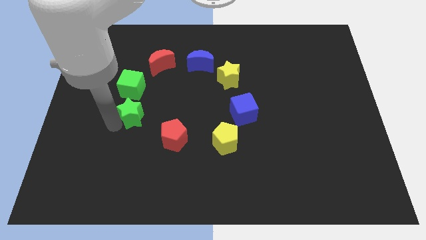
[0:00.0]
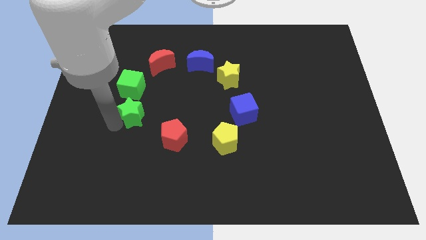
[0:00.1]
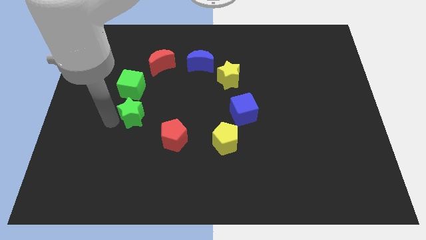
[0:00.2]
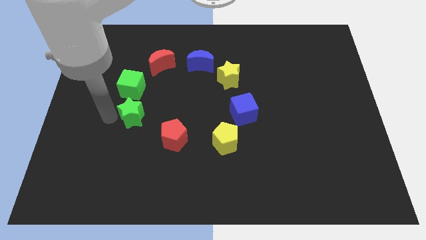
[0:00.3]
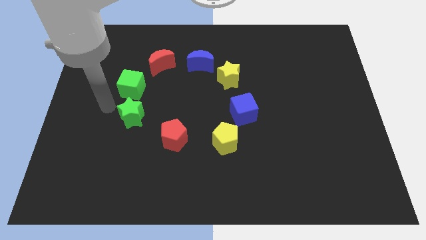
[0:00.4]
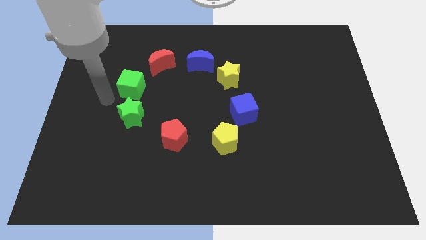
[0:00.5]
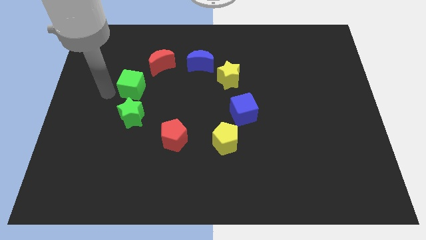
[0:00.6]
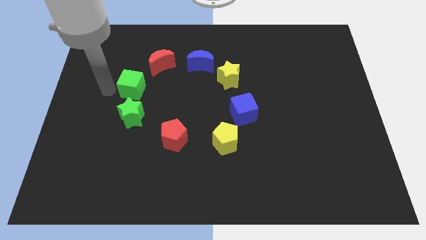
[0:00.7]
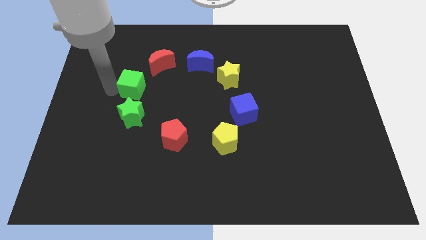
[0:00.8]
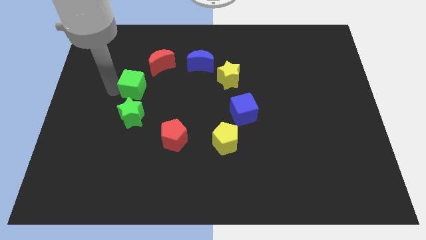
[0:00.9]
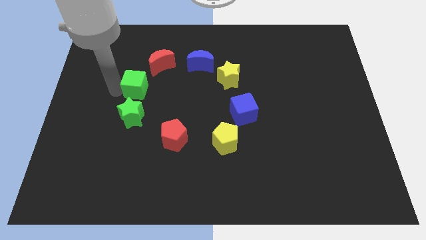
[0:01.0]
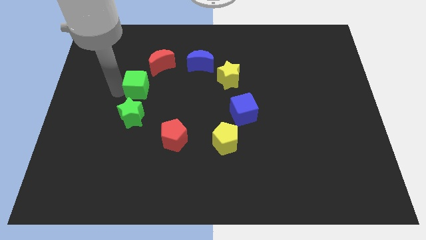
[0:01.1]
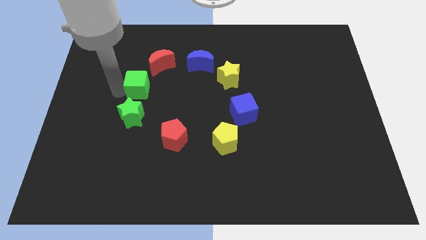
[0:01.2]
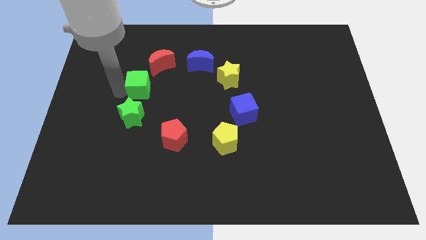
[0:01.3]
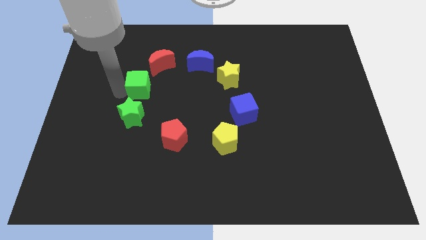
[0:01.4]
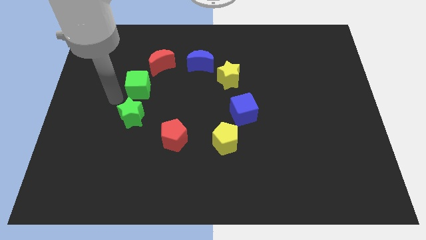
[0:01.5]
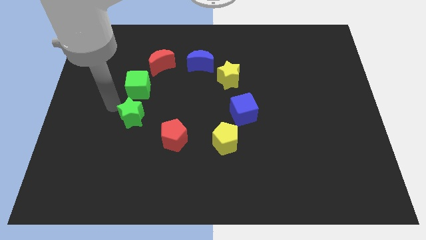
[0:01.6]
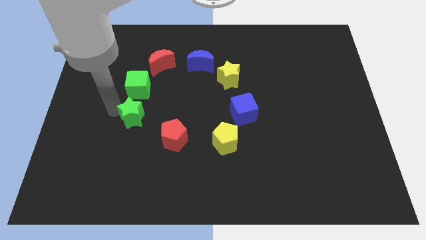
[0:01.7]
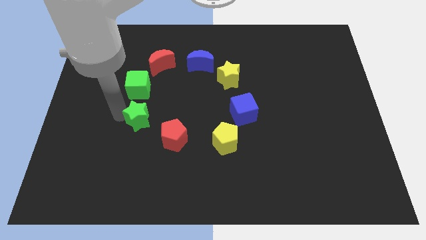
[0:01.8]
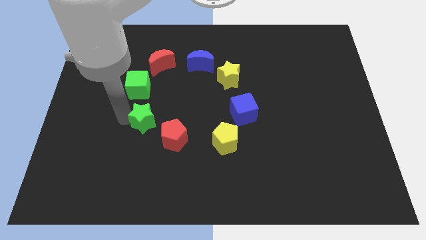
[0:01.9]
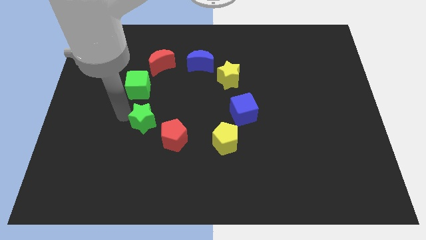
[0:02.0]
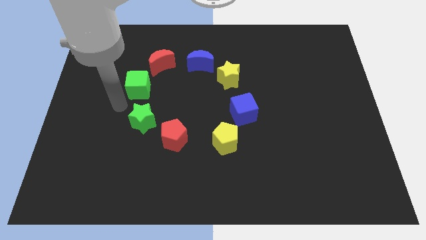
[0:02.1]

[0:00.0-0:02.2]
push green cube slightly right

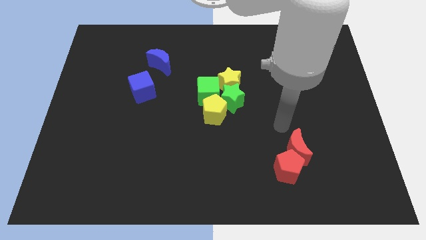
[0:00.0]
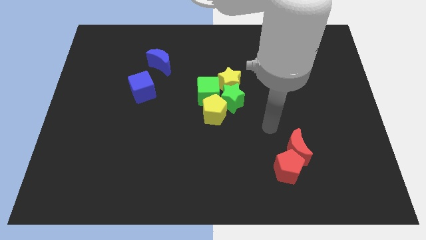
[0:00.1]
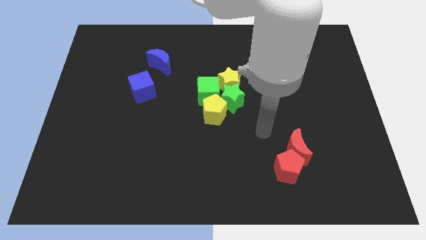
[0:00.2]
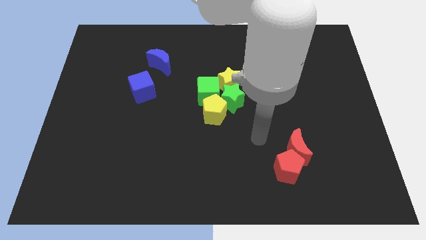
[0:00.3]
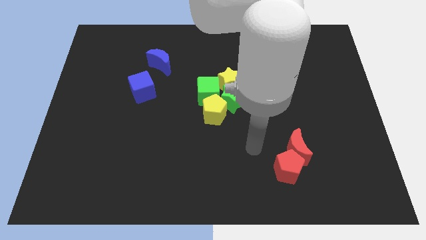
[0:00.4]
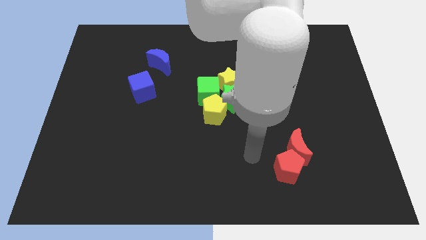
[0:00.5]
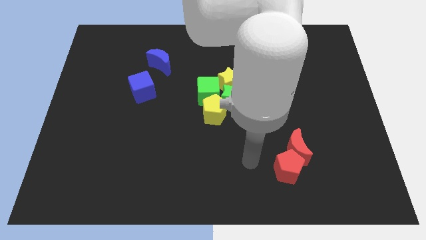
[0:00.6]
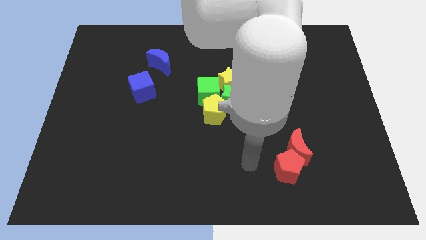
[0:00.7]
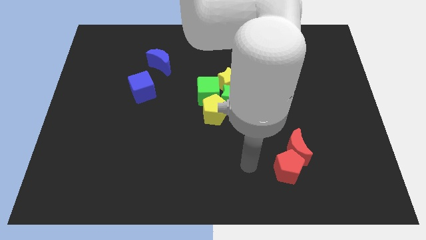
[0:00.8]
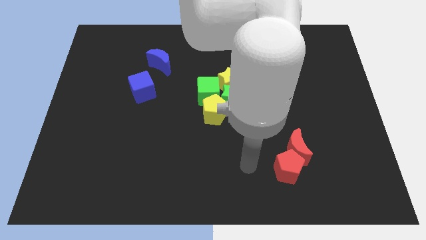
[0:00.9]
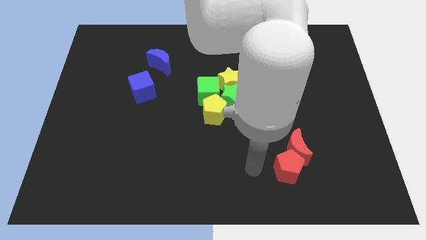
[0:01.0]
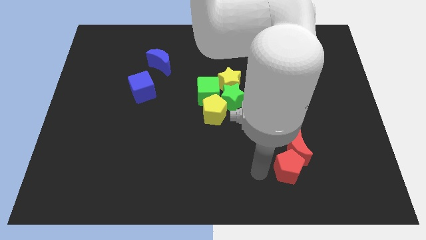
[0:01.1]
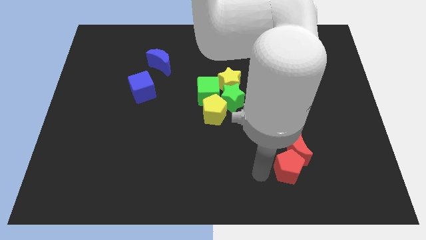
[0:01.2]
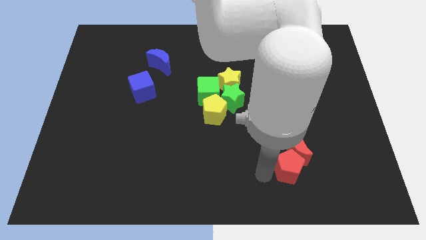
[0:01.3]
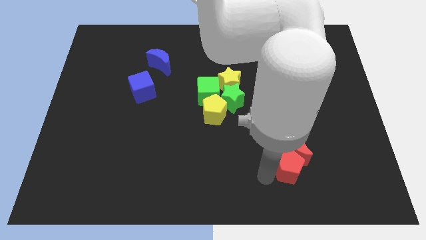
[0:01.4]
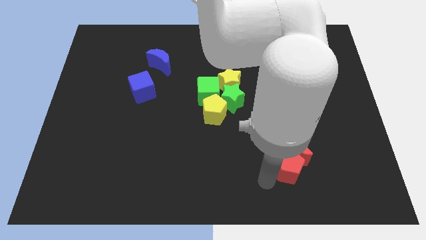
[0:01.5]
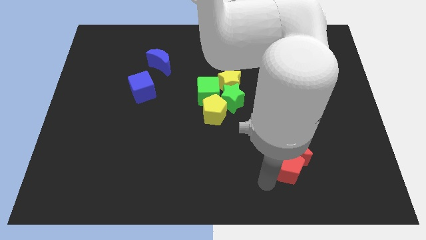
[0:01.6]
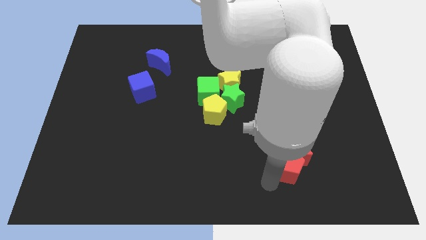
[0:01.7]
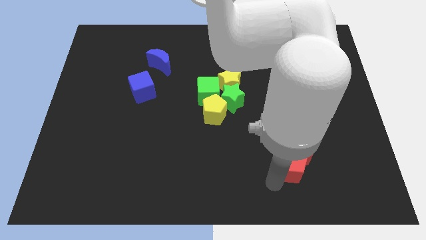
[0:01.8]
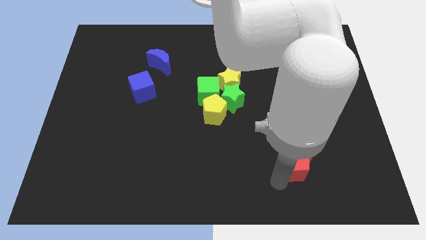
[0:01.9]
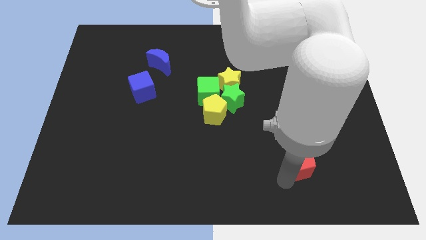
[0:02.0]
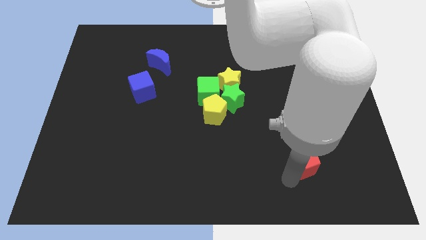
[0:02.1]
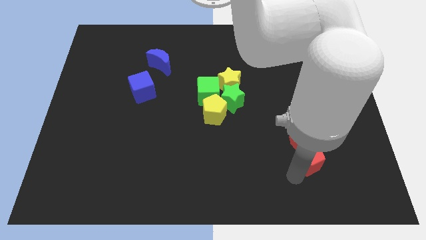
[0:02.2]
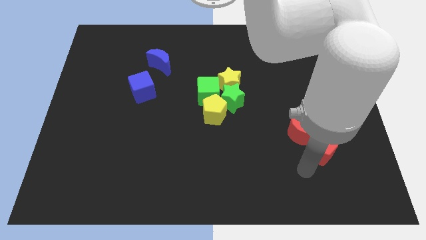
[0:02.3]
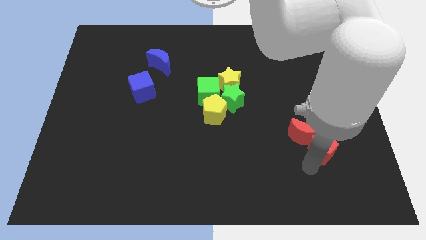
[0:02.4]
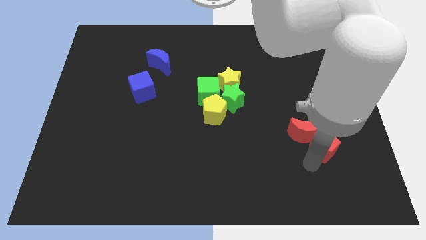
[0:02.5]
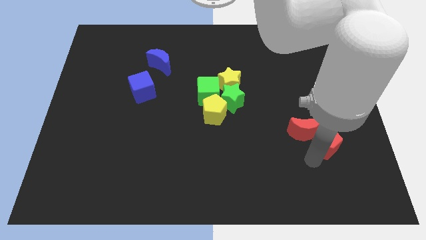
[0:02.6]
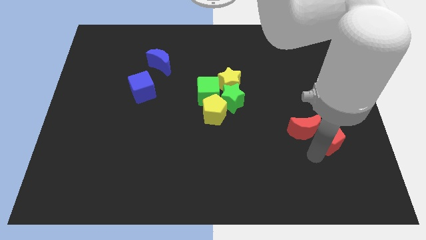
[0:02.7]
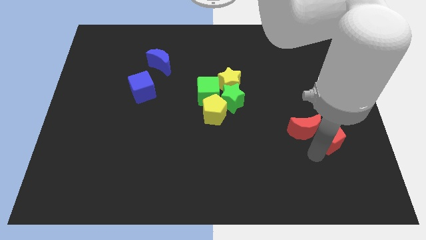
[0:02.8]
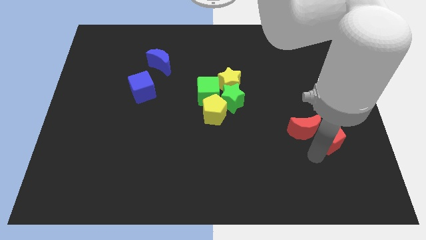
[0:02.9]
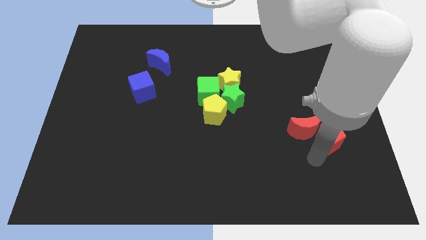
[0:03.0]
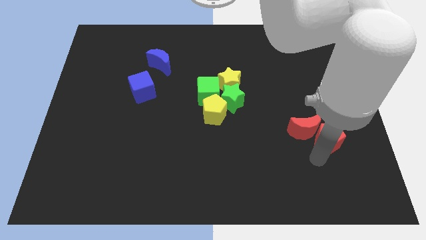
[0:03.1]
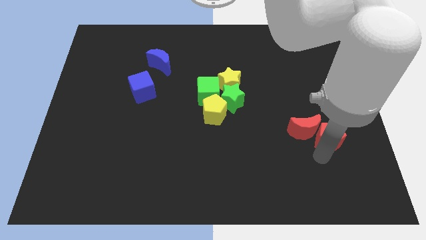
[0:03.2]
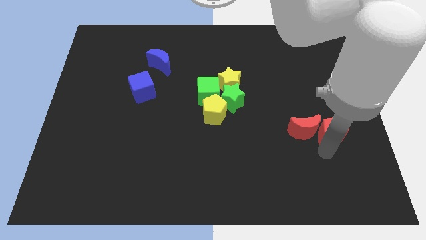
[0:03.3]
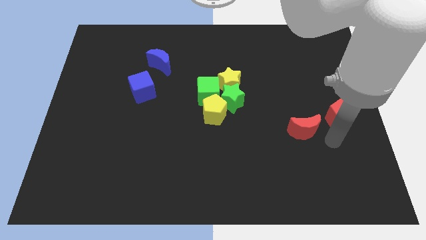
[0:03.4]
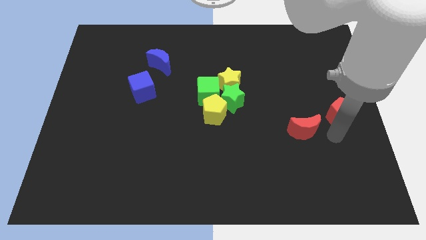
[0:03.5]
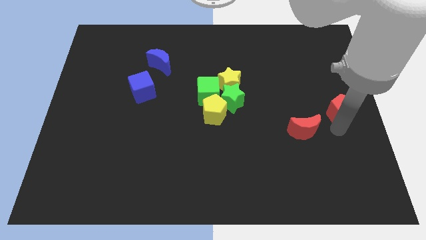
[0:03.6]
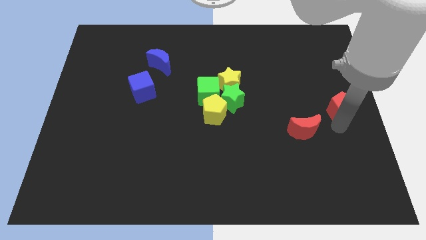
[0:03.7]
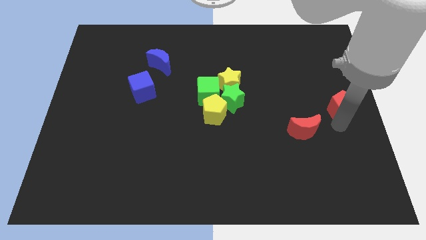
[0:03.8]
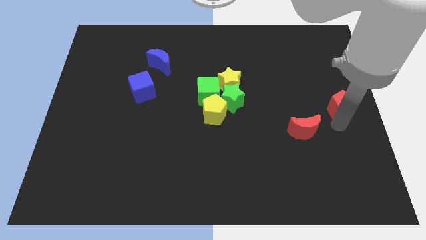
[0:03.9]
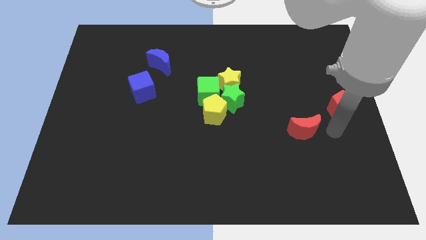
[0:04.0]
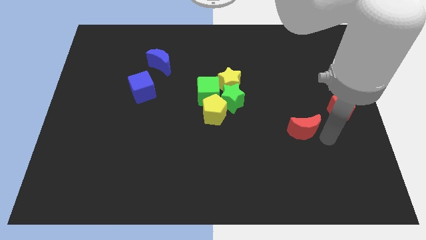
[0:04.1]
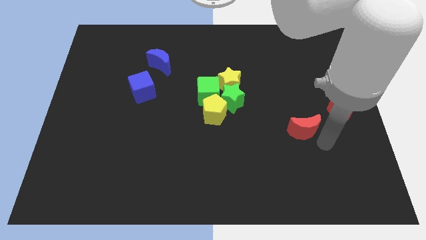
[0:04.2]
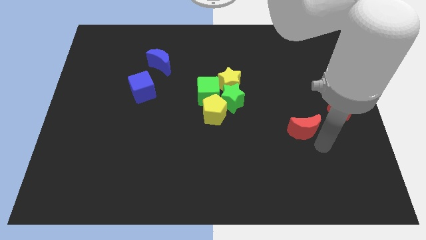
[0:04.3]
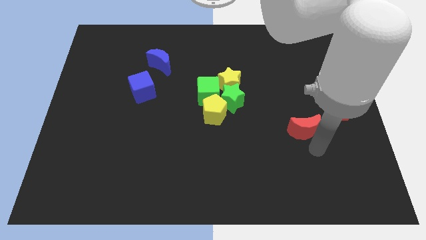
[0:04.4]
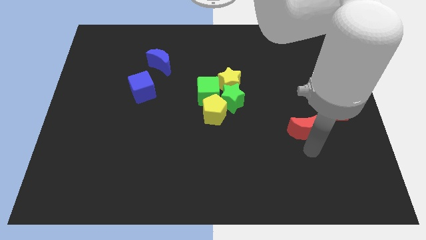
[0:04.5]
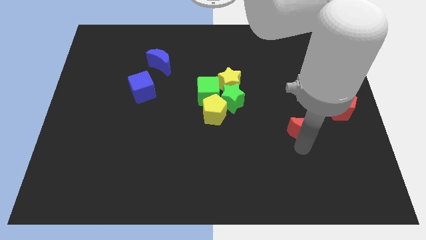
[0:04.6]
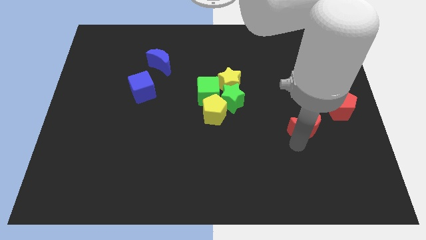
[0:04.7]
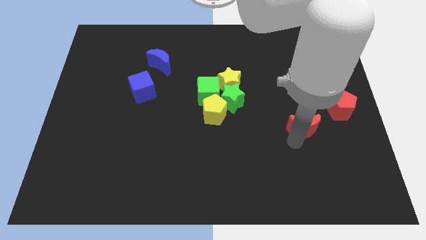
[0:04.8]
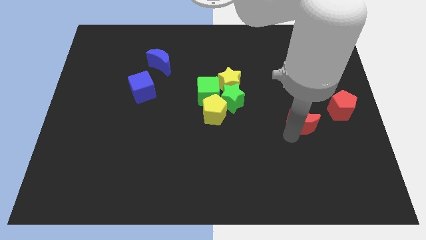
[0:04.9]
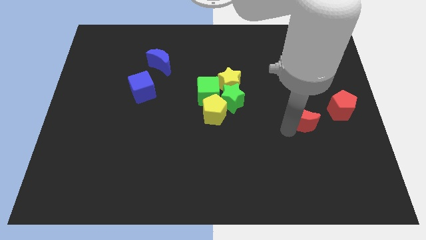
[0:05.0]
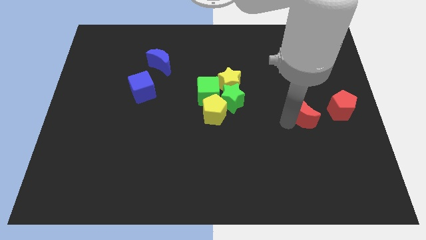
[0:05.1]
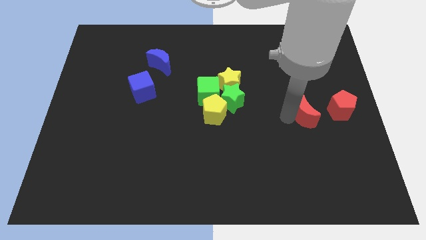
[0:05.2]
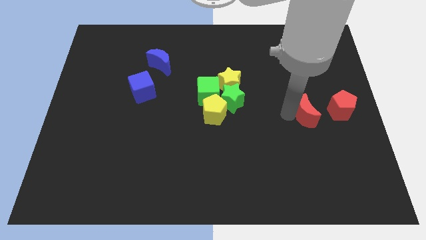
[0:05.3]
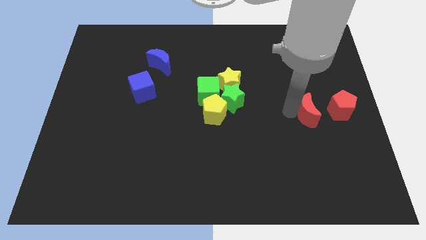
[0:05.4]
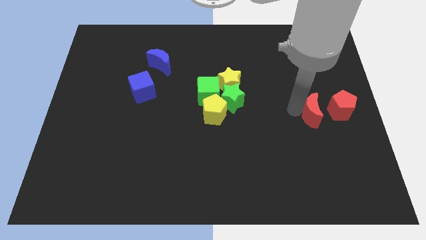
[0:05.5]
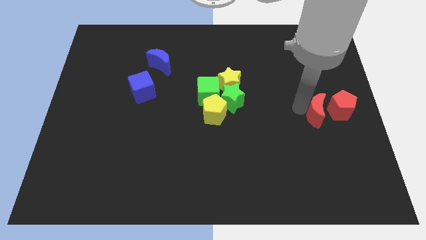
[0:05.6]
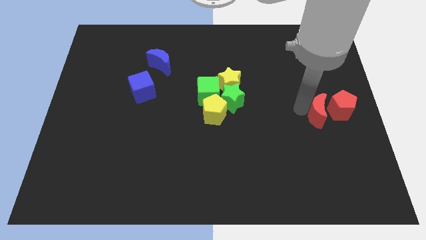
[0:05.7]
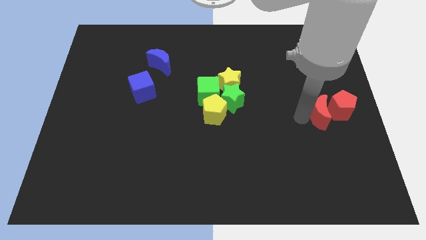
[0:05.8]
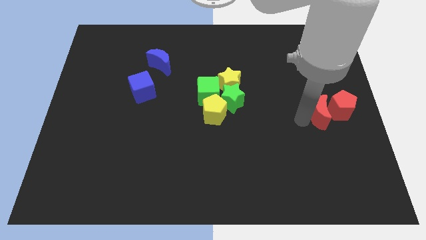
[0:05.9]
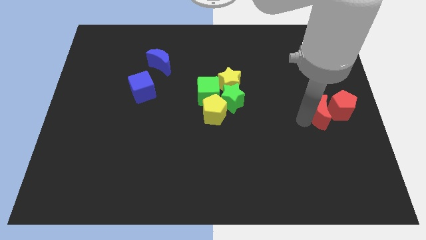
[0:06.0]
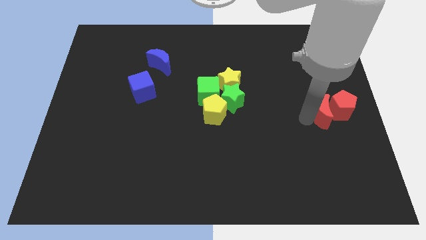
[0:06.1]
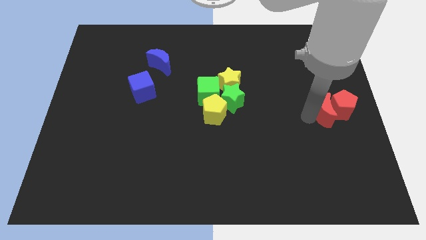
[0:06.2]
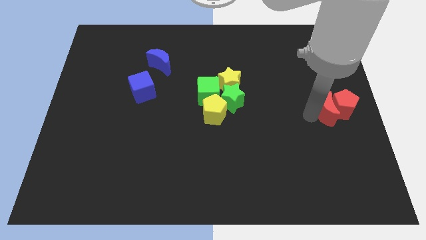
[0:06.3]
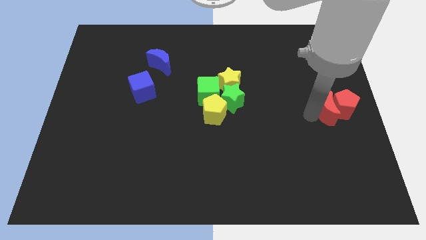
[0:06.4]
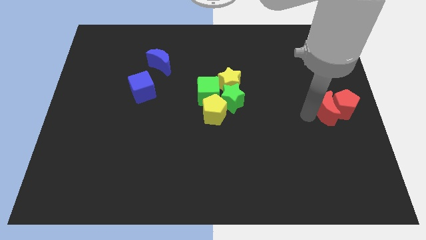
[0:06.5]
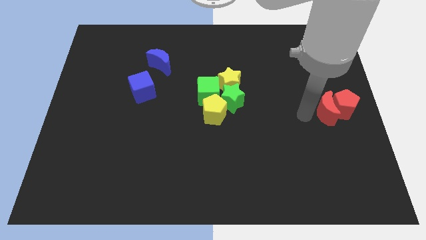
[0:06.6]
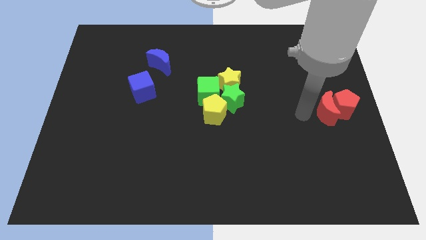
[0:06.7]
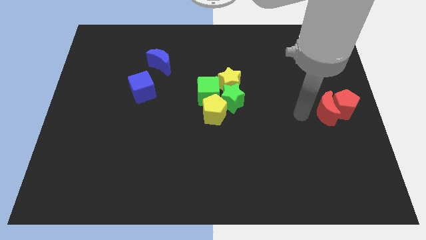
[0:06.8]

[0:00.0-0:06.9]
move the red pentagon and red crescent towards the center right of the board
